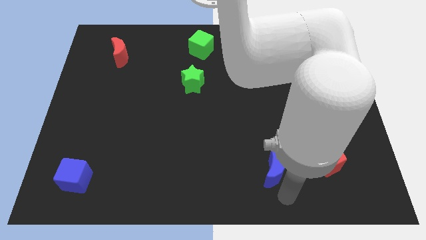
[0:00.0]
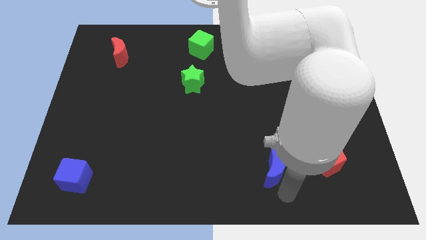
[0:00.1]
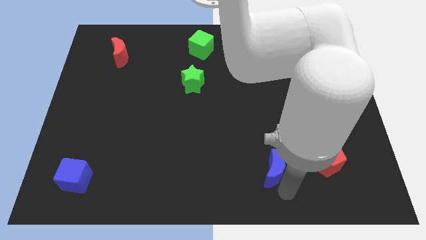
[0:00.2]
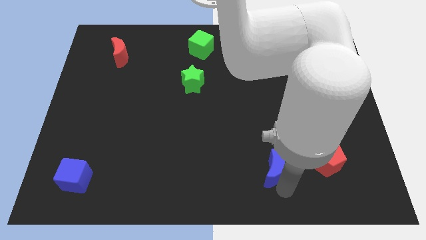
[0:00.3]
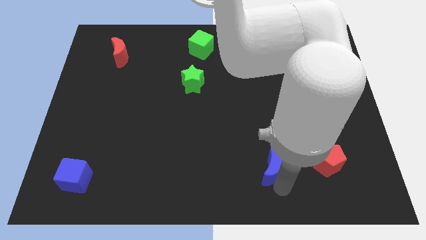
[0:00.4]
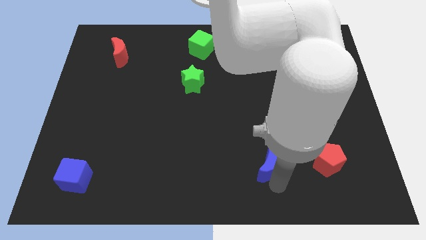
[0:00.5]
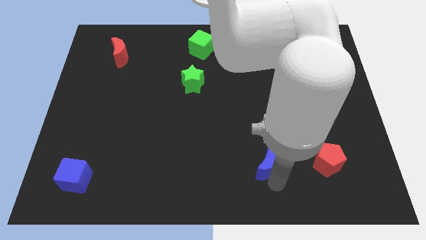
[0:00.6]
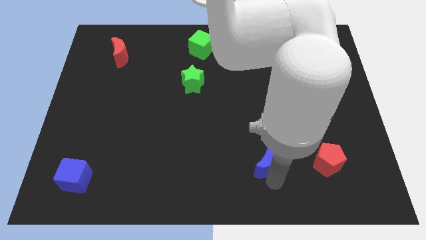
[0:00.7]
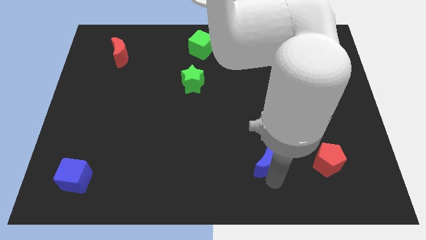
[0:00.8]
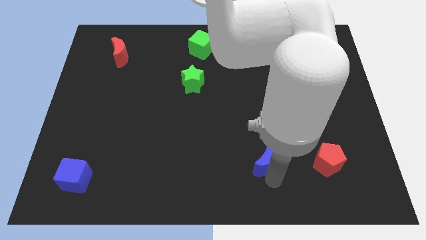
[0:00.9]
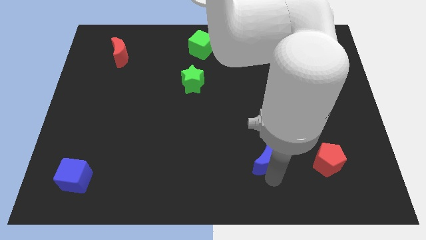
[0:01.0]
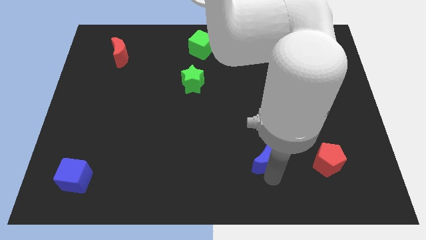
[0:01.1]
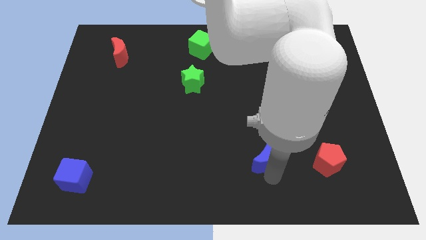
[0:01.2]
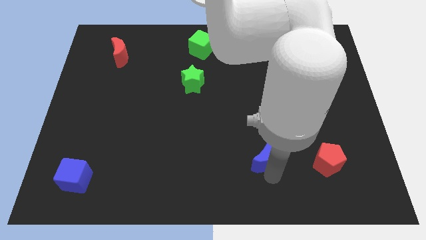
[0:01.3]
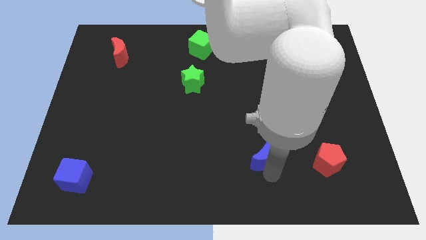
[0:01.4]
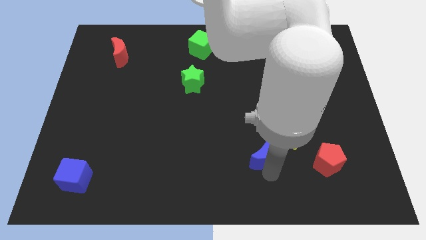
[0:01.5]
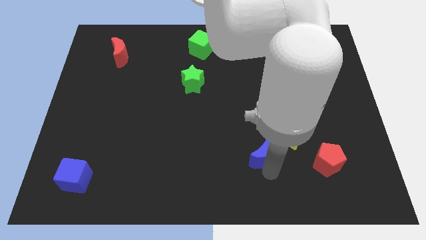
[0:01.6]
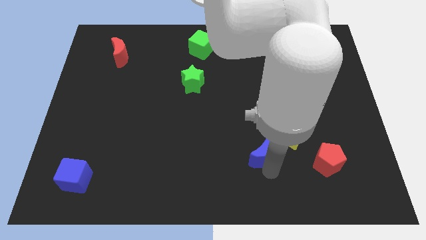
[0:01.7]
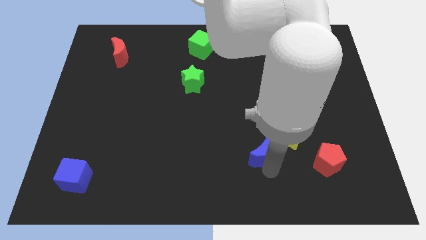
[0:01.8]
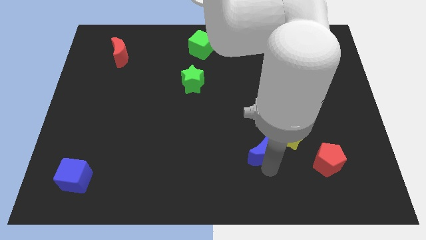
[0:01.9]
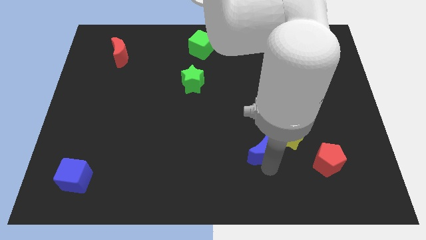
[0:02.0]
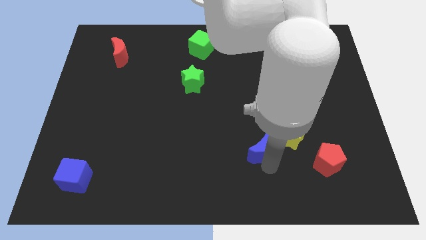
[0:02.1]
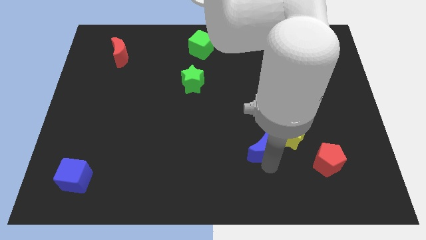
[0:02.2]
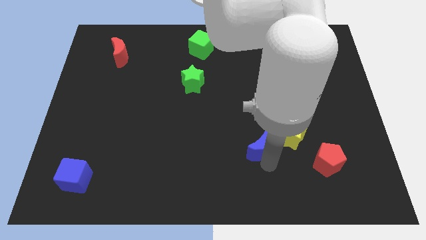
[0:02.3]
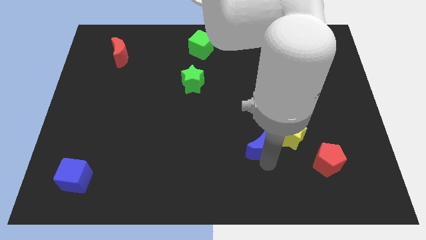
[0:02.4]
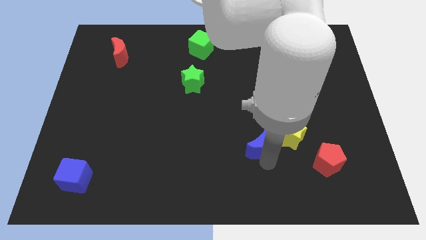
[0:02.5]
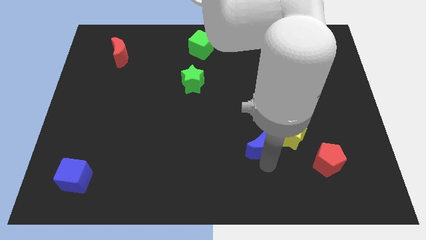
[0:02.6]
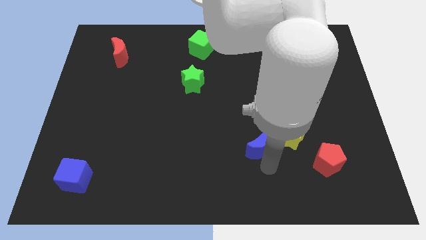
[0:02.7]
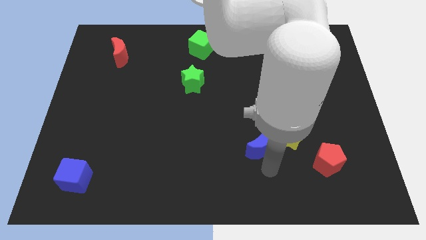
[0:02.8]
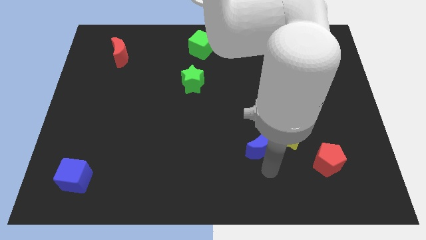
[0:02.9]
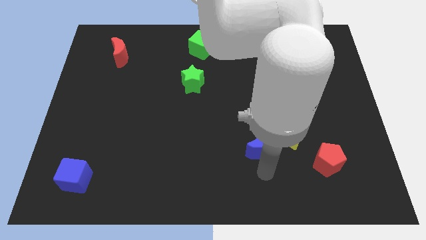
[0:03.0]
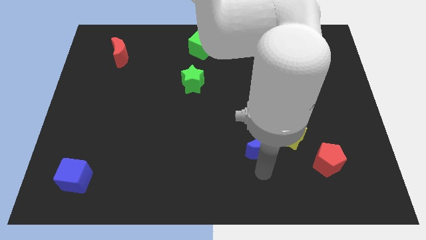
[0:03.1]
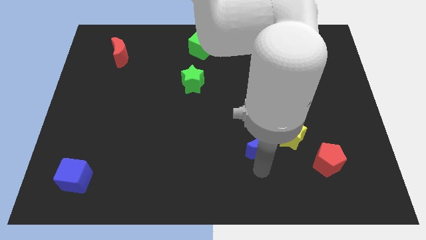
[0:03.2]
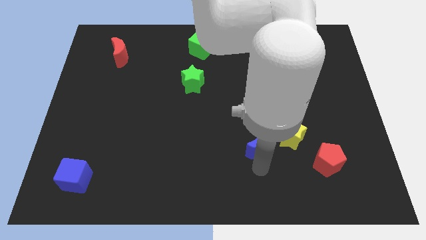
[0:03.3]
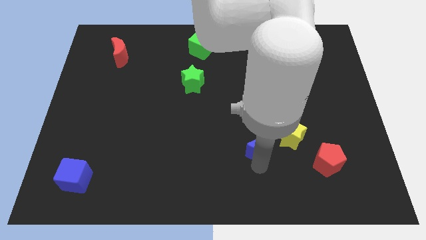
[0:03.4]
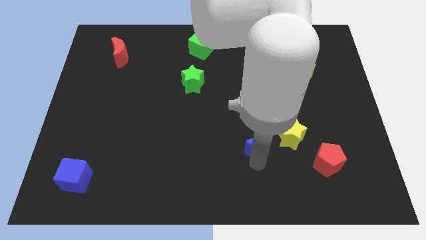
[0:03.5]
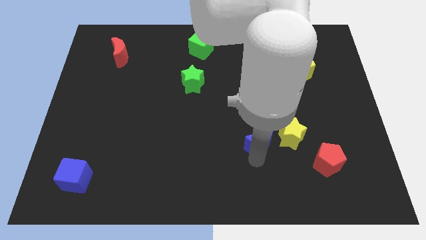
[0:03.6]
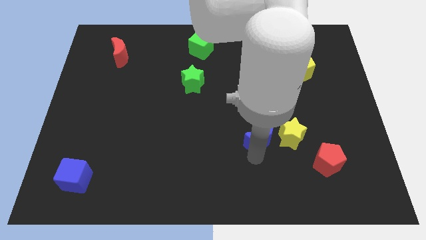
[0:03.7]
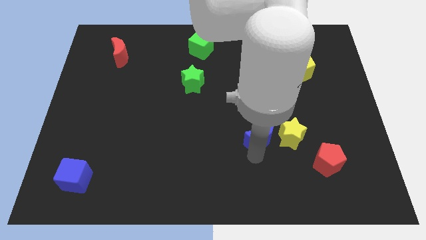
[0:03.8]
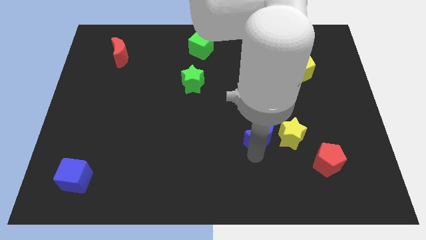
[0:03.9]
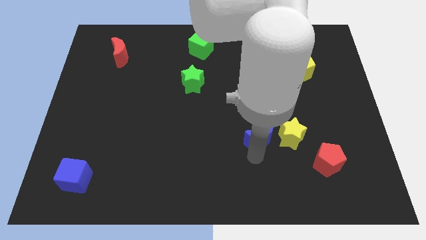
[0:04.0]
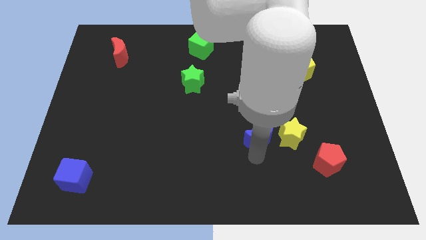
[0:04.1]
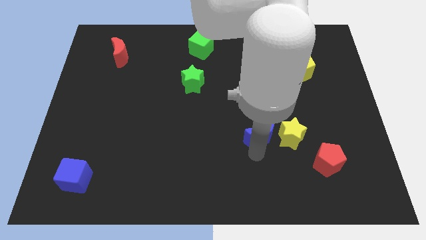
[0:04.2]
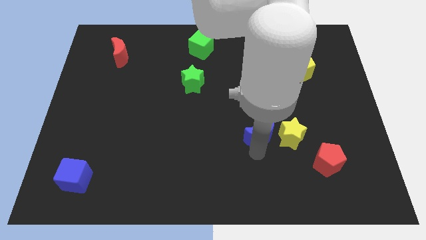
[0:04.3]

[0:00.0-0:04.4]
place the blue moon right to the yellow star

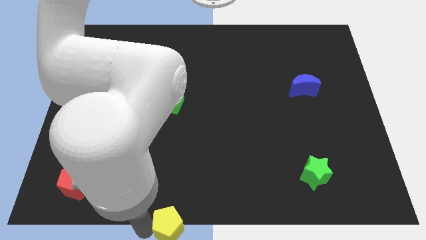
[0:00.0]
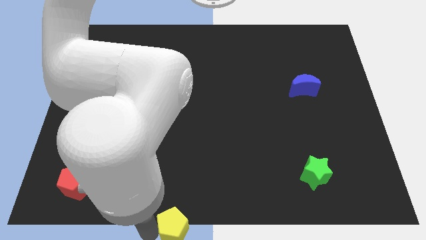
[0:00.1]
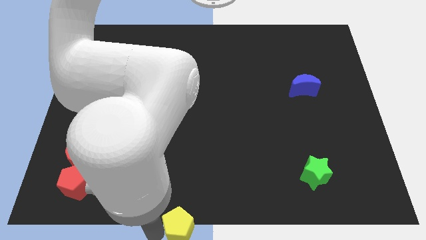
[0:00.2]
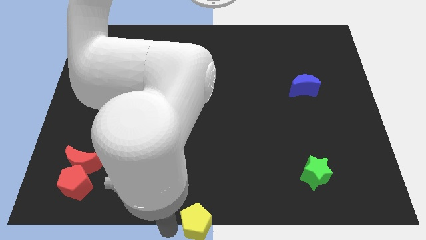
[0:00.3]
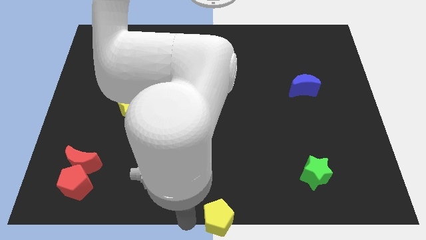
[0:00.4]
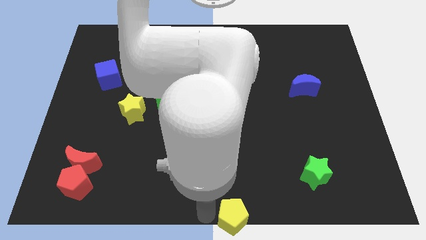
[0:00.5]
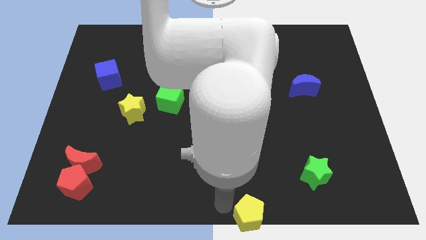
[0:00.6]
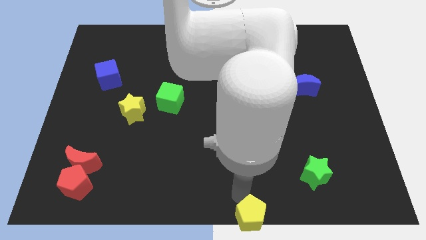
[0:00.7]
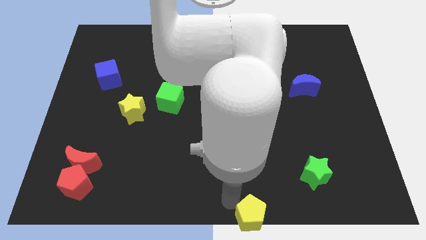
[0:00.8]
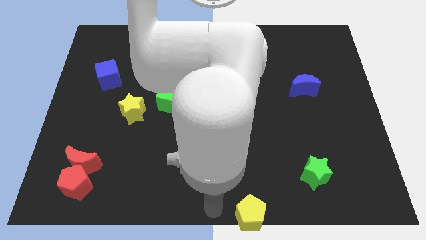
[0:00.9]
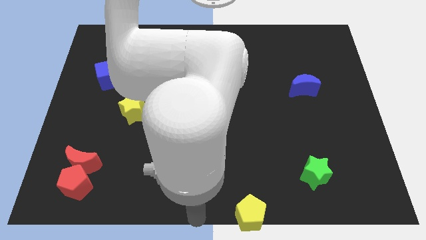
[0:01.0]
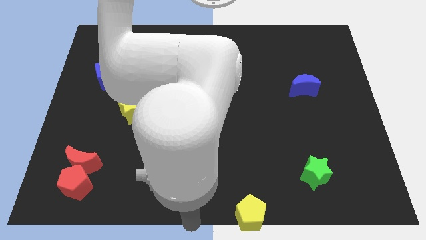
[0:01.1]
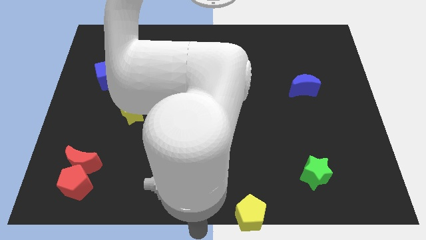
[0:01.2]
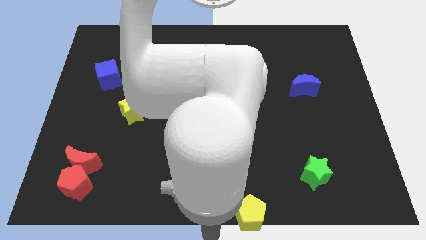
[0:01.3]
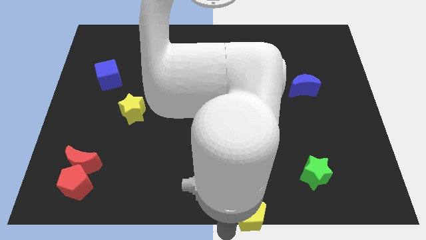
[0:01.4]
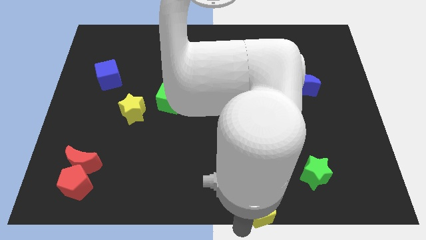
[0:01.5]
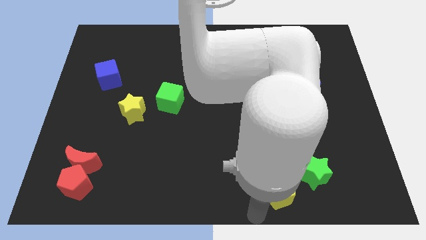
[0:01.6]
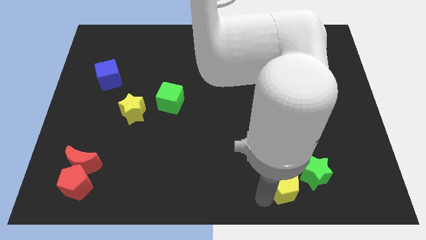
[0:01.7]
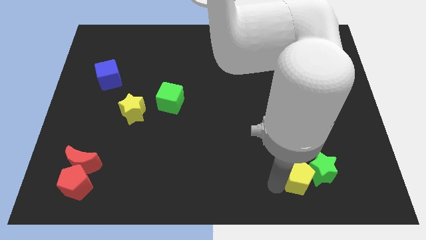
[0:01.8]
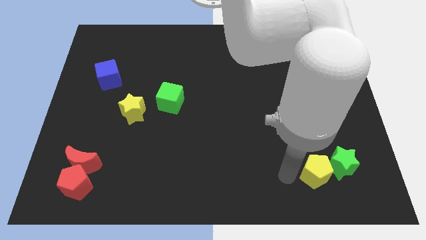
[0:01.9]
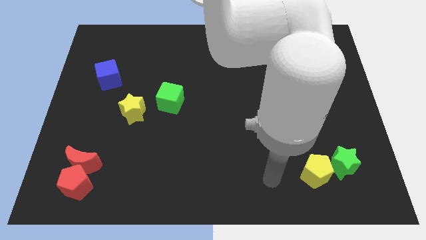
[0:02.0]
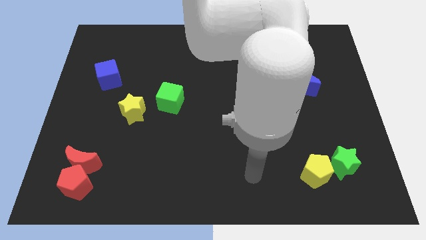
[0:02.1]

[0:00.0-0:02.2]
push the yellow pentagon into the green star

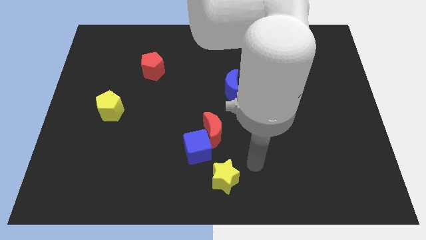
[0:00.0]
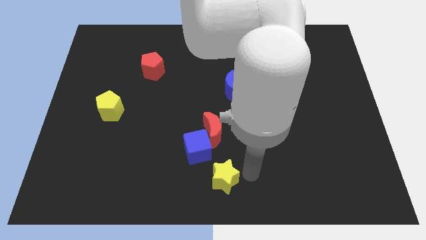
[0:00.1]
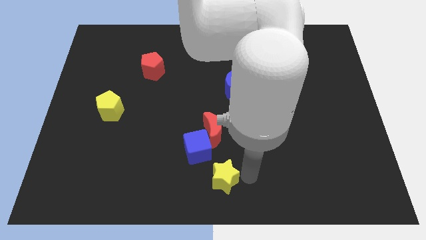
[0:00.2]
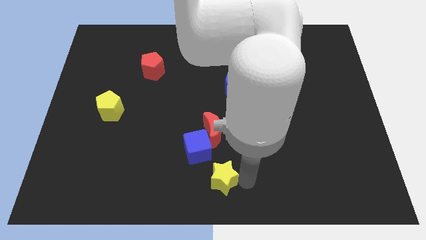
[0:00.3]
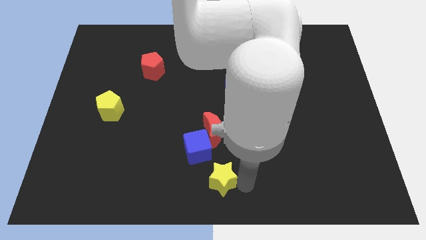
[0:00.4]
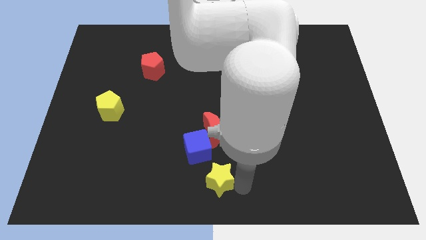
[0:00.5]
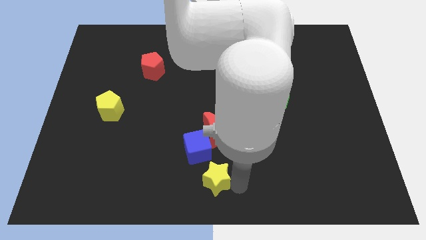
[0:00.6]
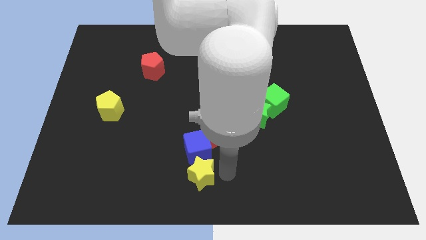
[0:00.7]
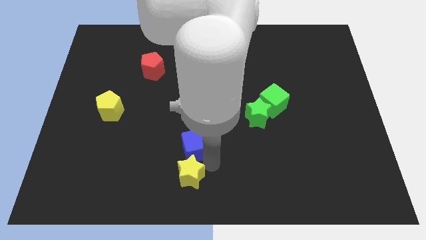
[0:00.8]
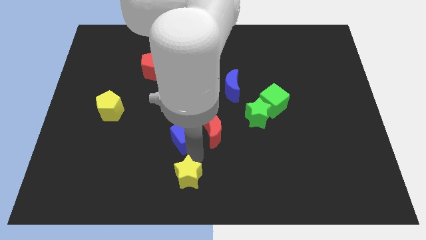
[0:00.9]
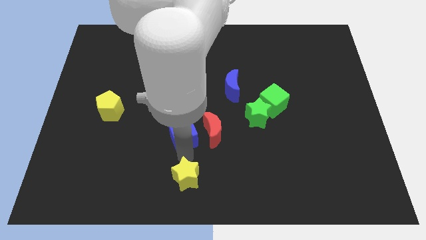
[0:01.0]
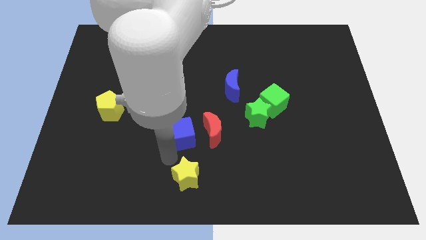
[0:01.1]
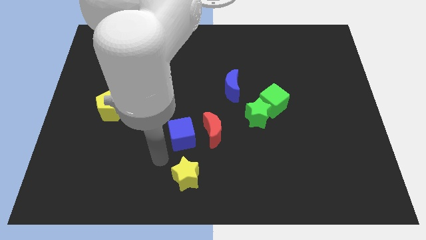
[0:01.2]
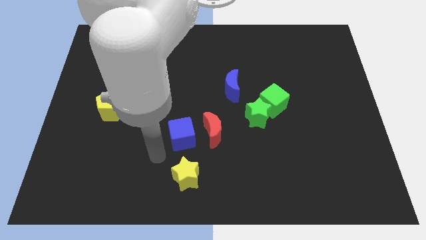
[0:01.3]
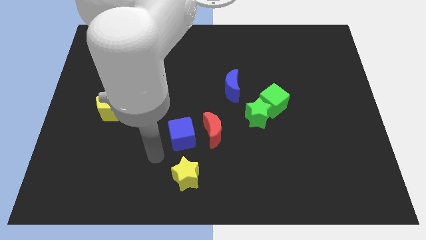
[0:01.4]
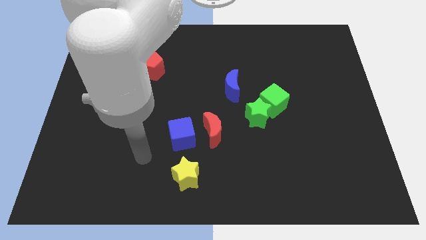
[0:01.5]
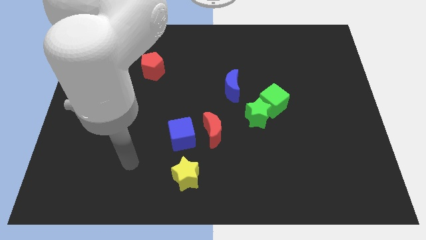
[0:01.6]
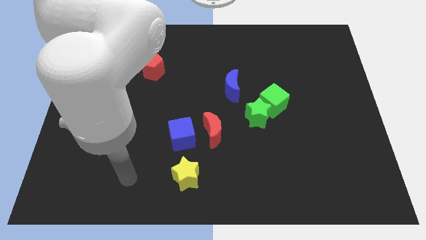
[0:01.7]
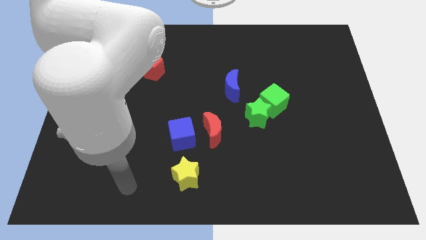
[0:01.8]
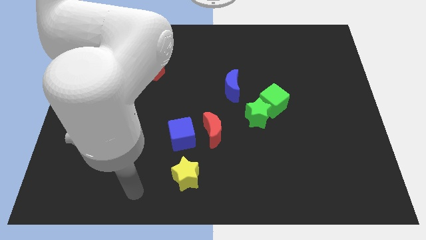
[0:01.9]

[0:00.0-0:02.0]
slide the yellow star vertically below the below cube

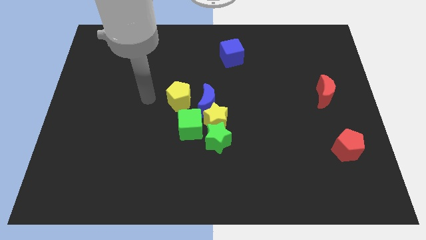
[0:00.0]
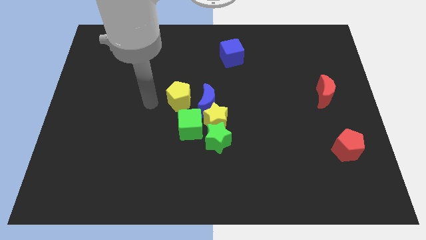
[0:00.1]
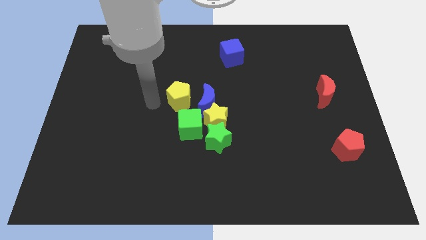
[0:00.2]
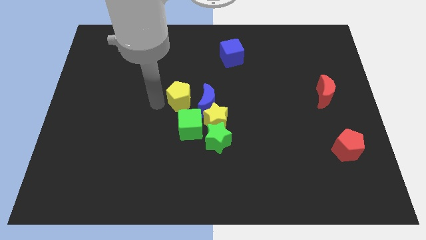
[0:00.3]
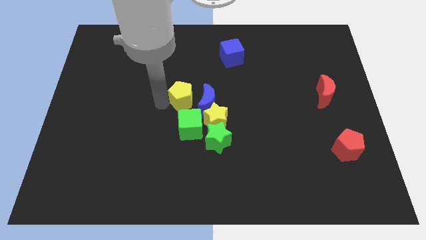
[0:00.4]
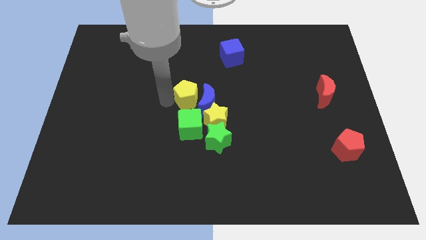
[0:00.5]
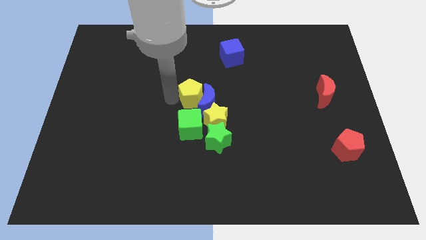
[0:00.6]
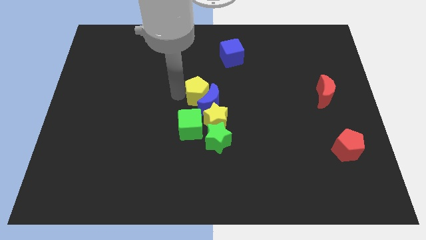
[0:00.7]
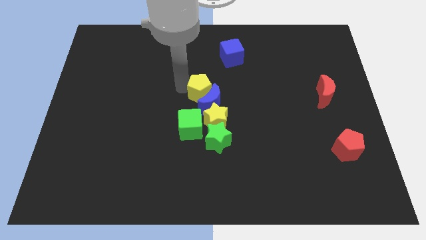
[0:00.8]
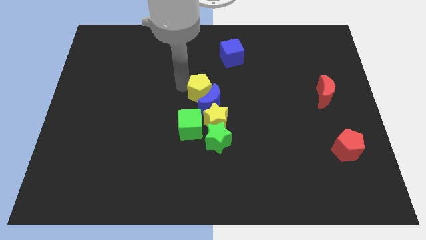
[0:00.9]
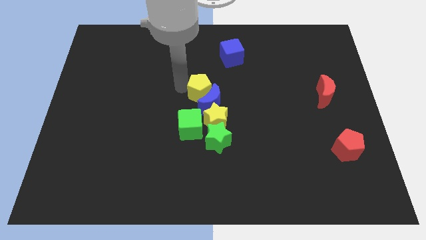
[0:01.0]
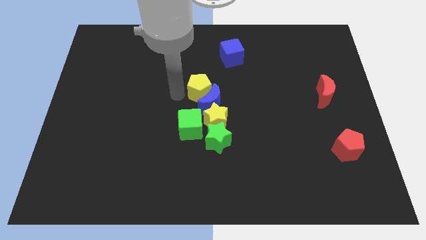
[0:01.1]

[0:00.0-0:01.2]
push the yellow pentagon into the blue moon
